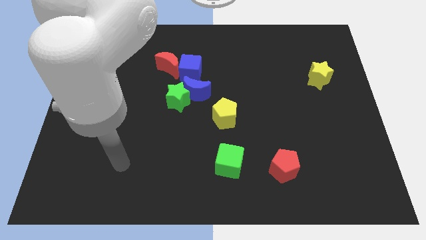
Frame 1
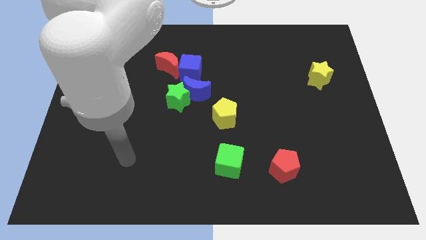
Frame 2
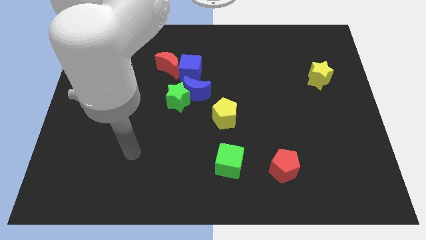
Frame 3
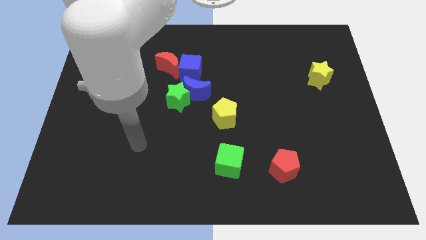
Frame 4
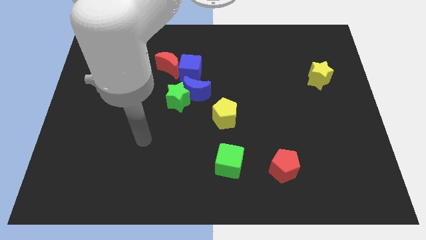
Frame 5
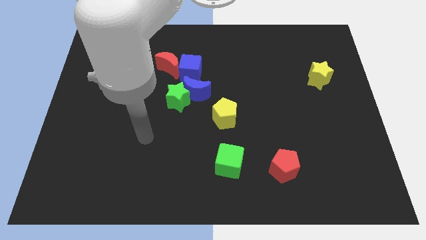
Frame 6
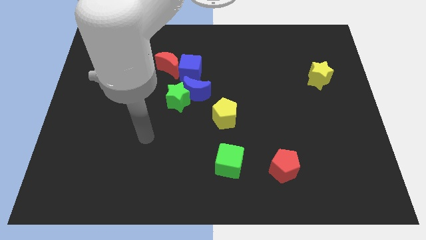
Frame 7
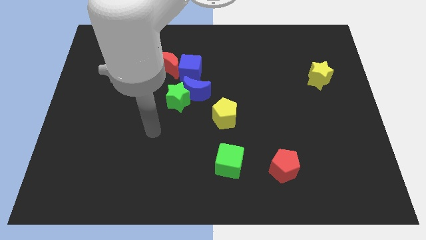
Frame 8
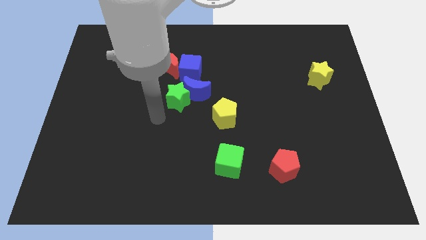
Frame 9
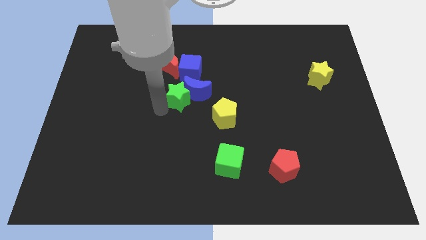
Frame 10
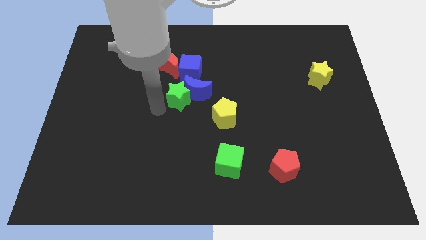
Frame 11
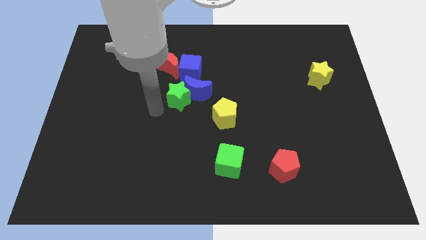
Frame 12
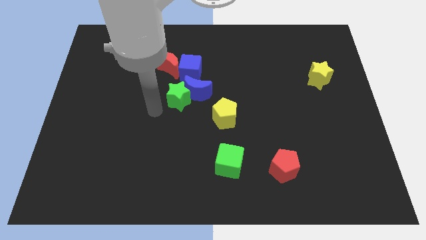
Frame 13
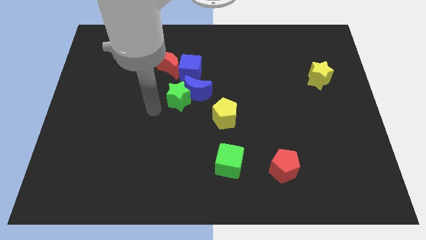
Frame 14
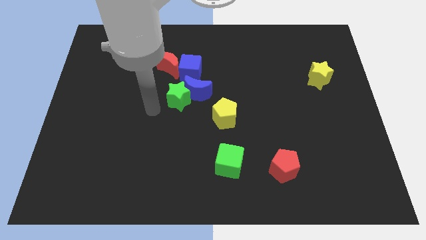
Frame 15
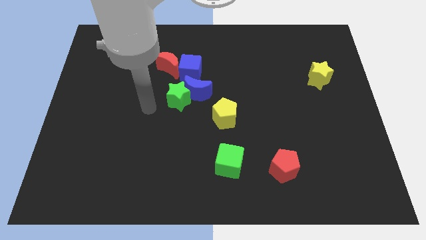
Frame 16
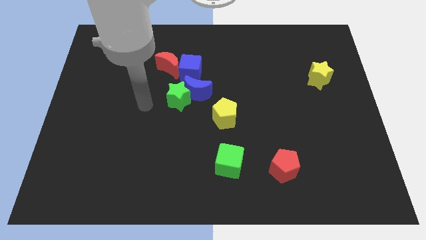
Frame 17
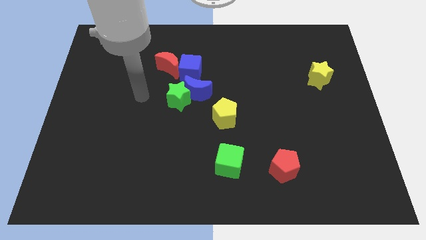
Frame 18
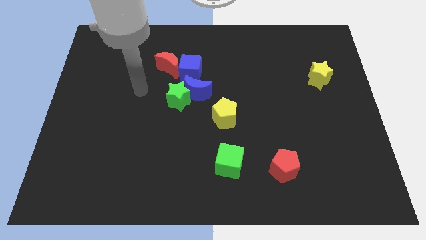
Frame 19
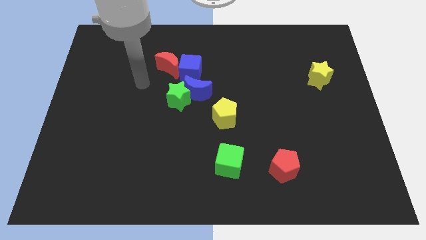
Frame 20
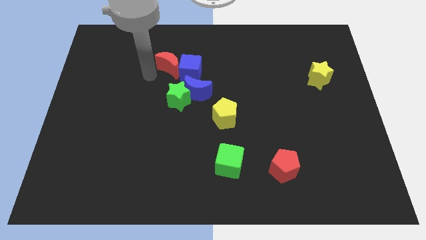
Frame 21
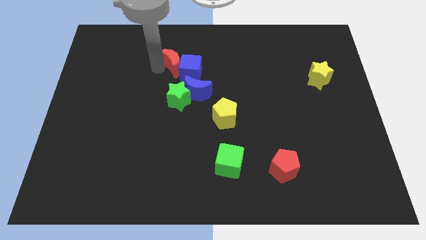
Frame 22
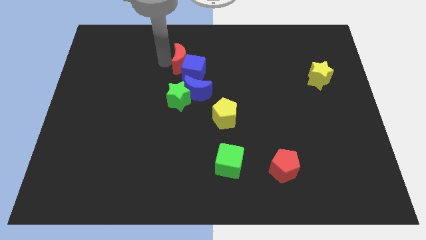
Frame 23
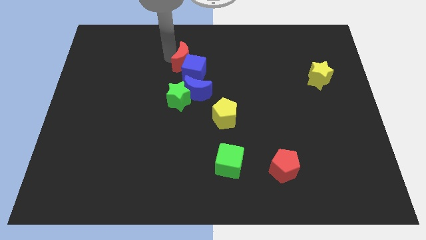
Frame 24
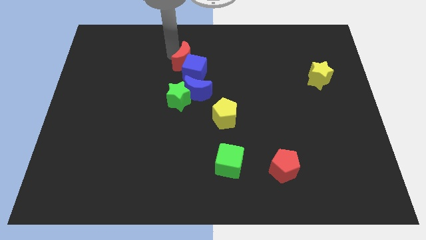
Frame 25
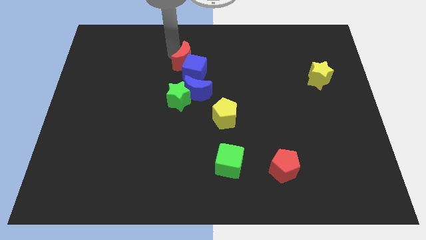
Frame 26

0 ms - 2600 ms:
slightly push the green star and red moon

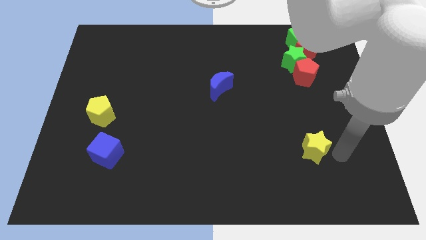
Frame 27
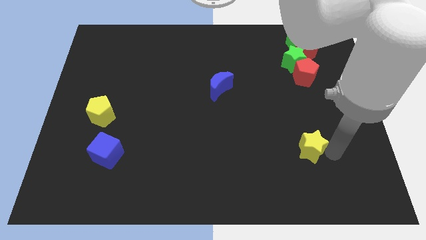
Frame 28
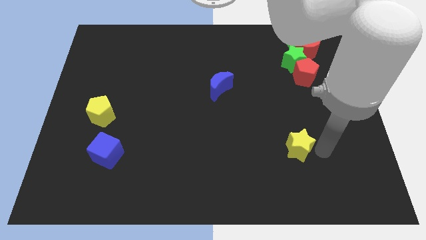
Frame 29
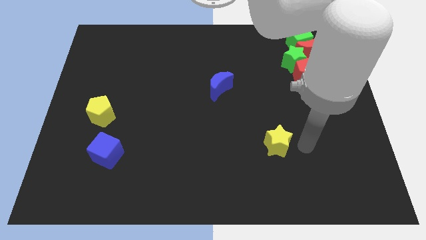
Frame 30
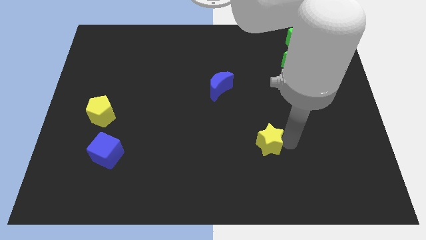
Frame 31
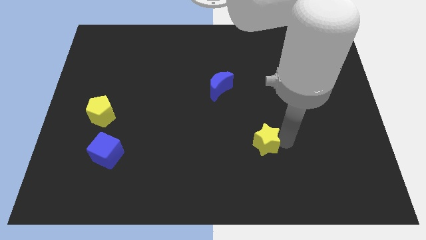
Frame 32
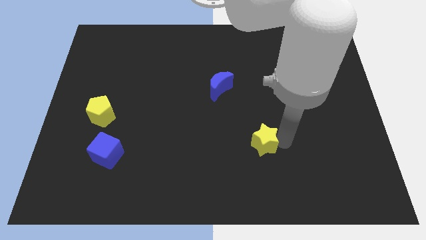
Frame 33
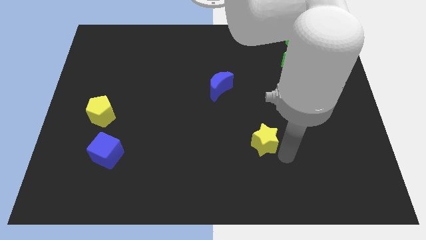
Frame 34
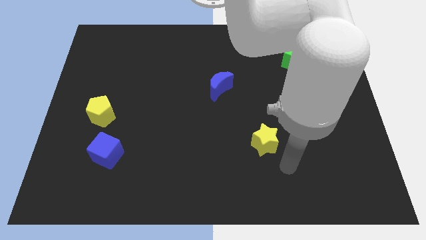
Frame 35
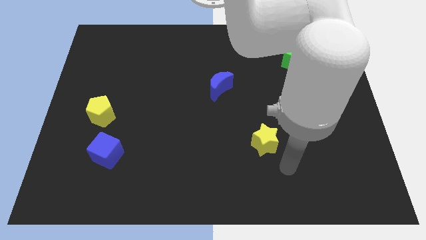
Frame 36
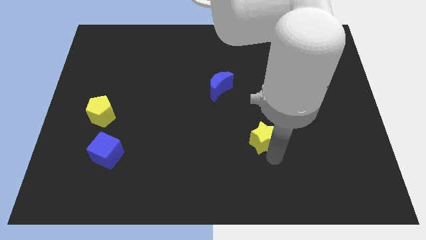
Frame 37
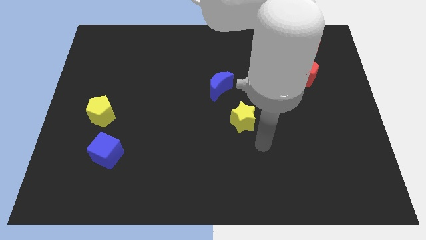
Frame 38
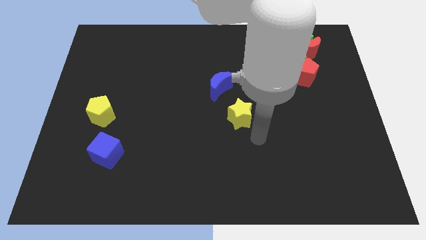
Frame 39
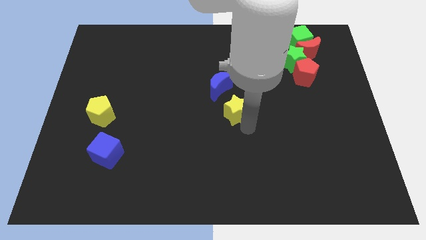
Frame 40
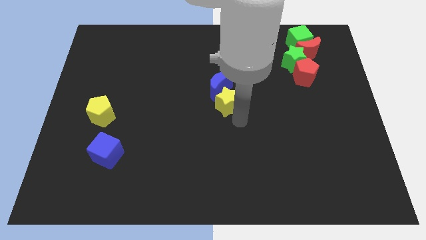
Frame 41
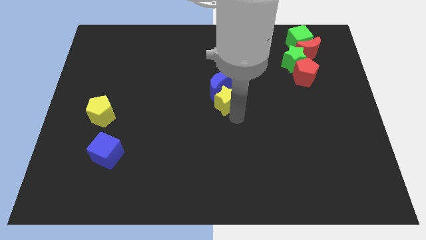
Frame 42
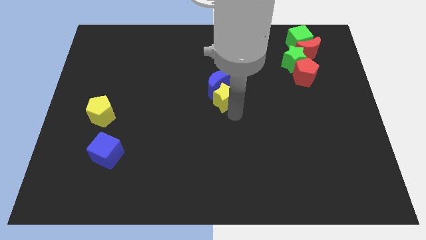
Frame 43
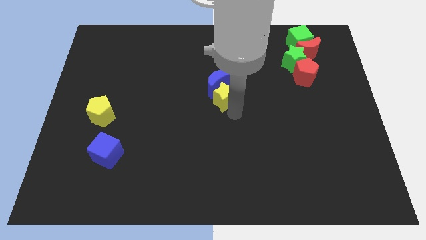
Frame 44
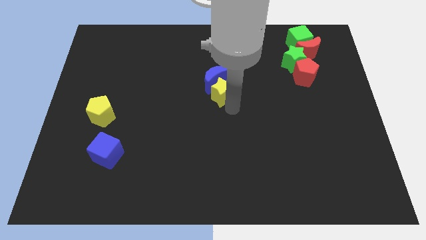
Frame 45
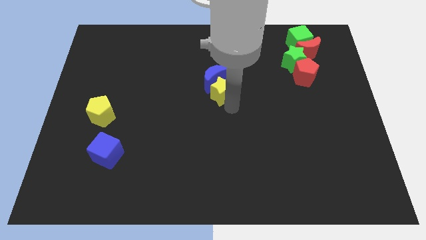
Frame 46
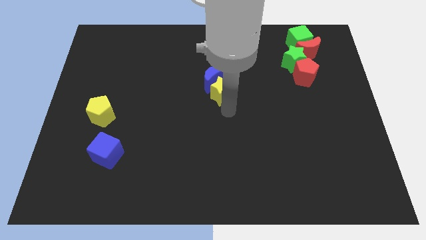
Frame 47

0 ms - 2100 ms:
push the yellow star into the blue moon

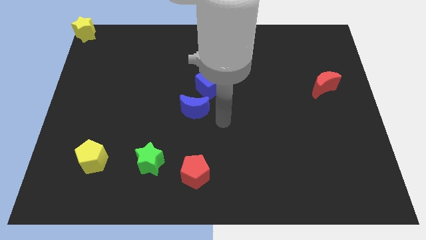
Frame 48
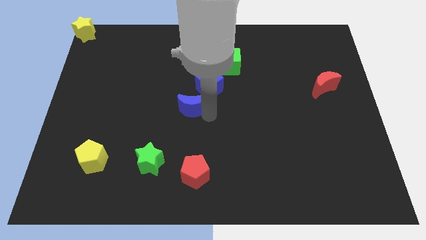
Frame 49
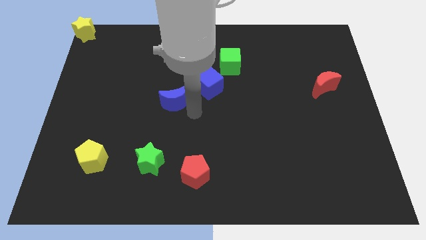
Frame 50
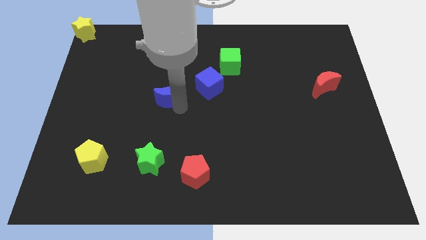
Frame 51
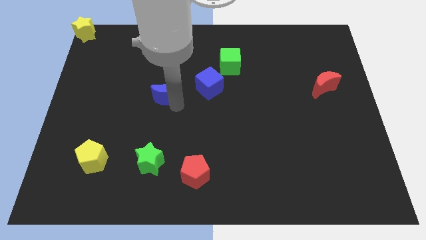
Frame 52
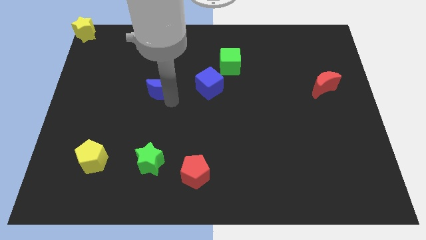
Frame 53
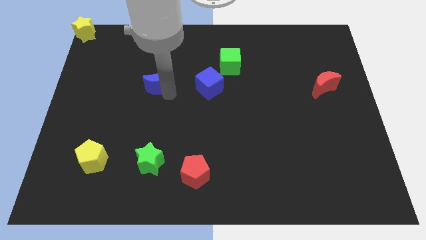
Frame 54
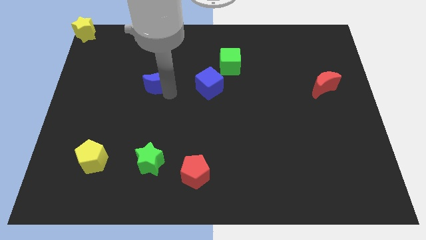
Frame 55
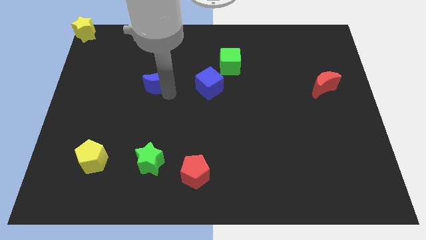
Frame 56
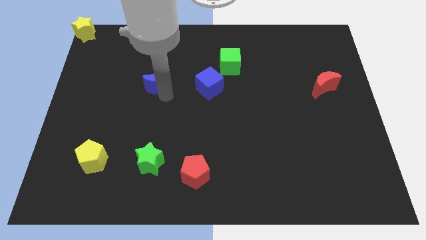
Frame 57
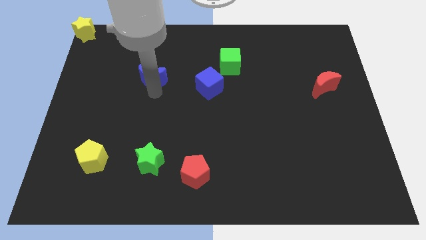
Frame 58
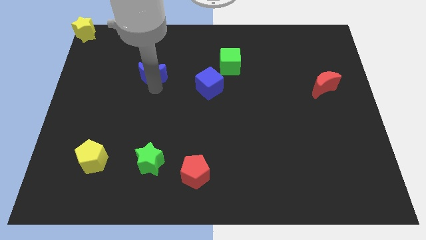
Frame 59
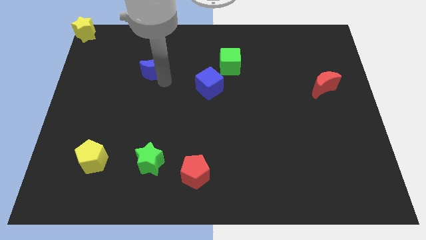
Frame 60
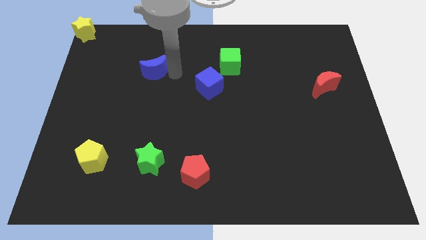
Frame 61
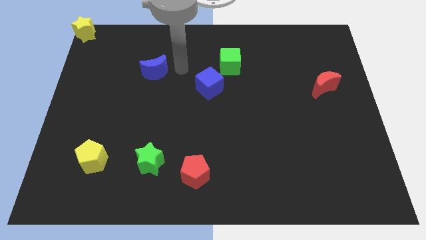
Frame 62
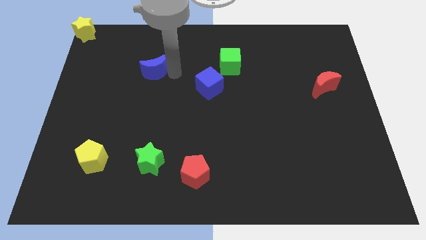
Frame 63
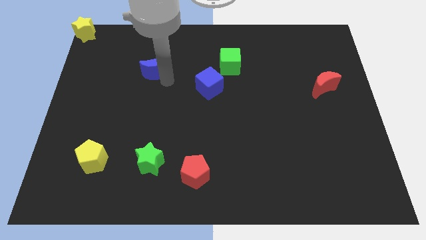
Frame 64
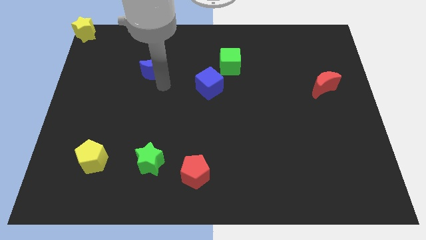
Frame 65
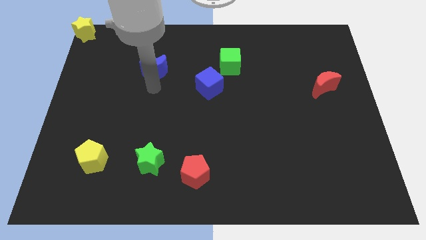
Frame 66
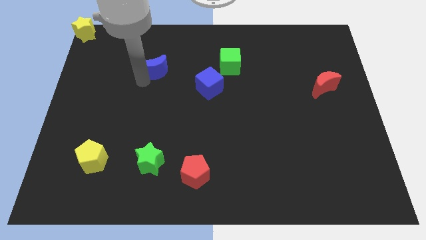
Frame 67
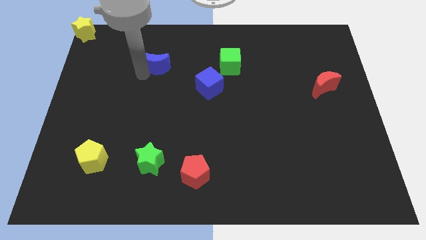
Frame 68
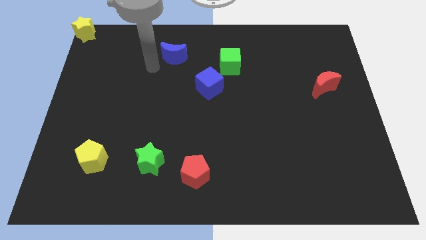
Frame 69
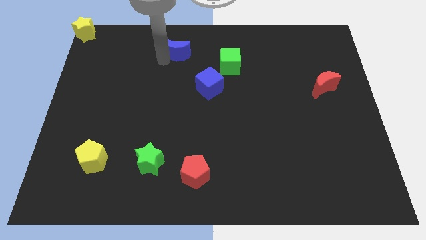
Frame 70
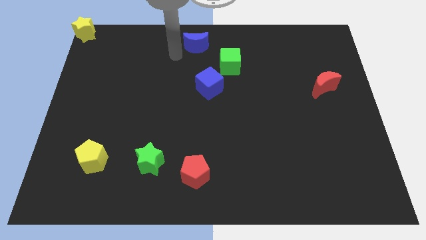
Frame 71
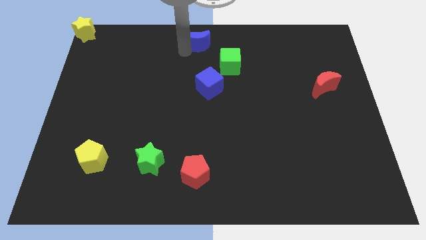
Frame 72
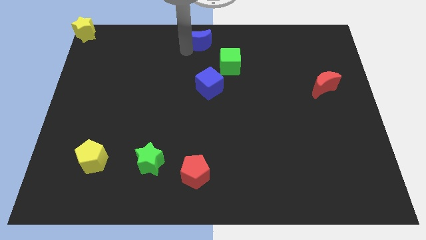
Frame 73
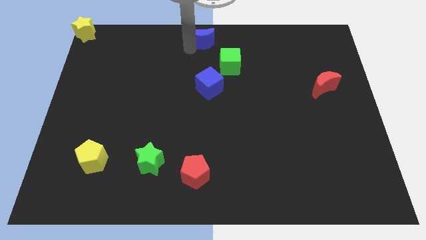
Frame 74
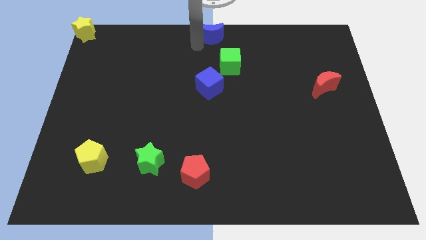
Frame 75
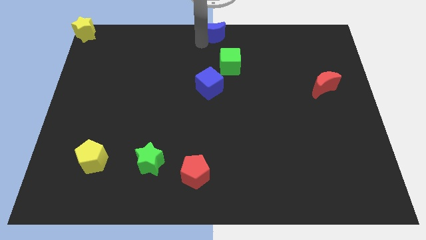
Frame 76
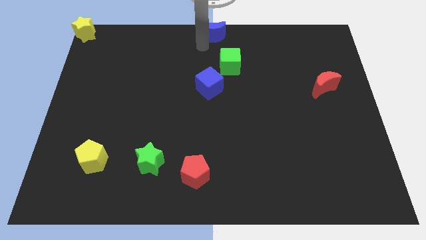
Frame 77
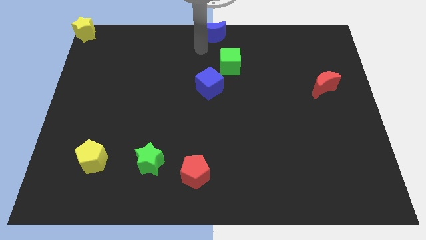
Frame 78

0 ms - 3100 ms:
place blue moon to the top center

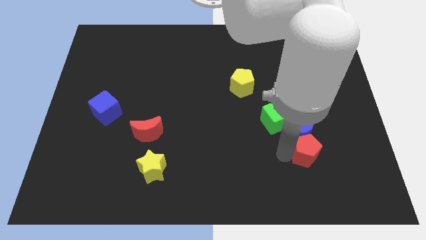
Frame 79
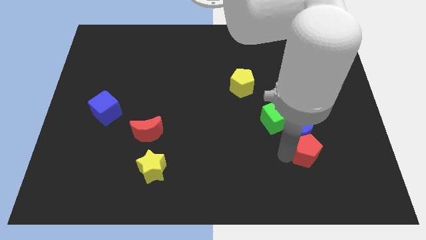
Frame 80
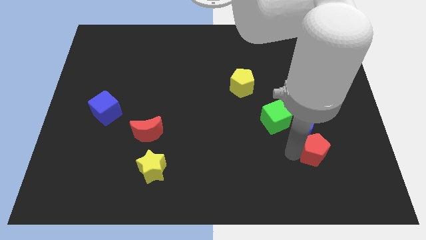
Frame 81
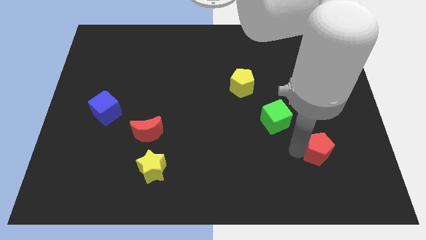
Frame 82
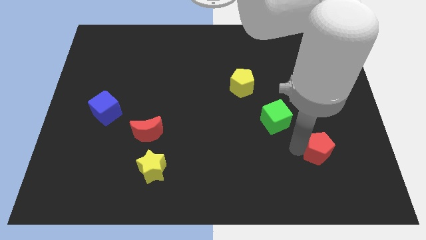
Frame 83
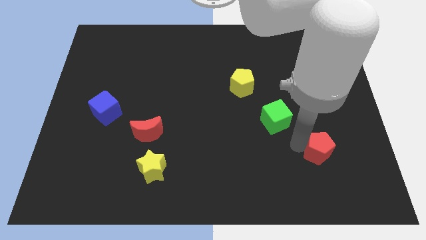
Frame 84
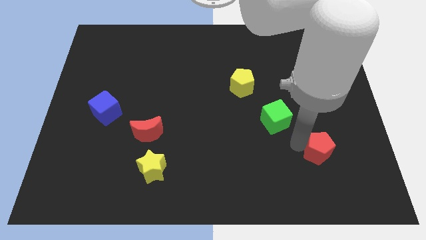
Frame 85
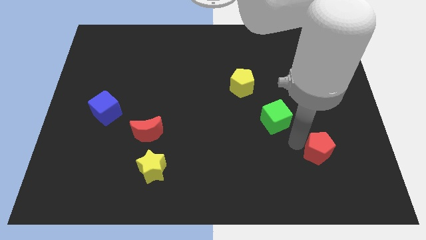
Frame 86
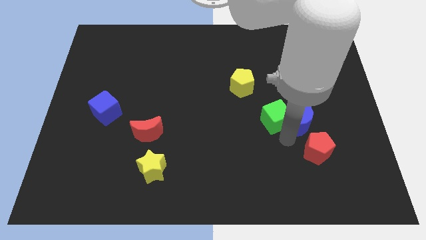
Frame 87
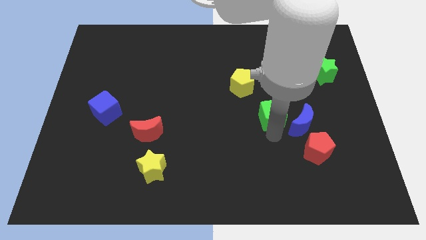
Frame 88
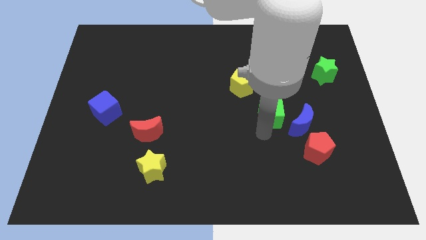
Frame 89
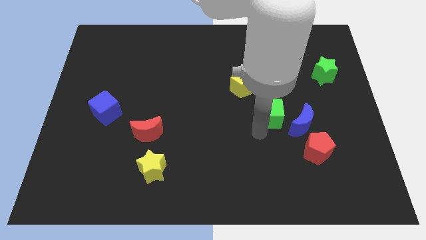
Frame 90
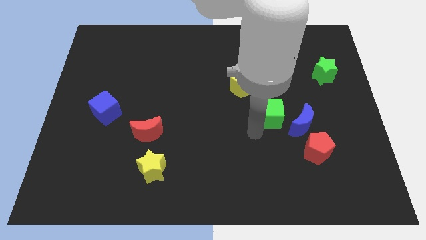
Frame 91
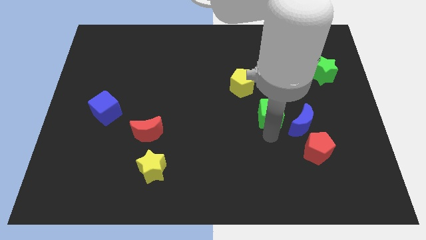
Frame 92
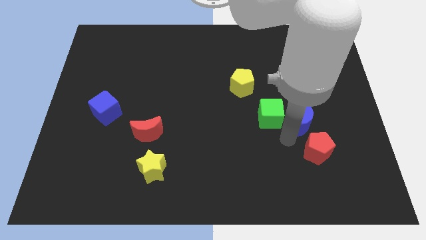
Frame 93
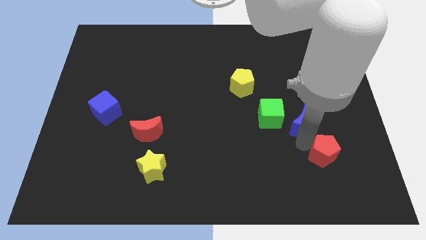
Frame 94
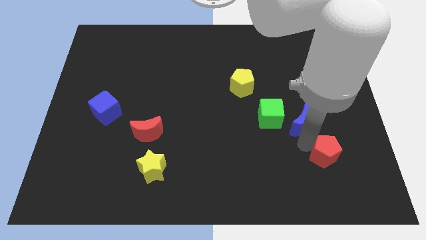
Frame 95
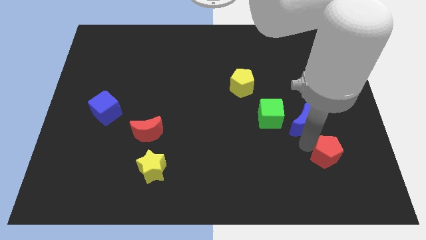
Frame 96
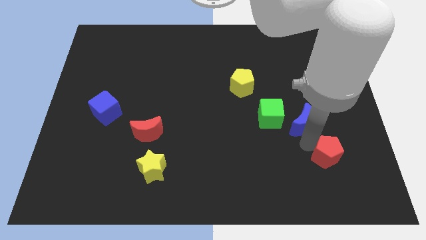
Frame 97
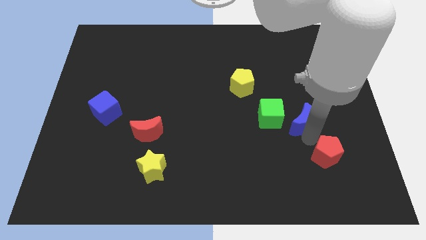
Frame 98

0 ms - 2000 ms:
place your arm in between the blue moon and red pentagon
